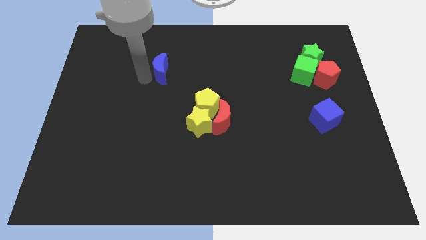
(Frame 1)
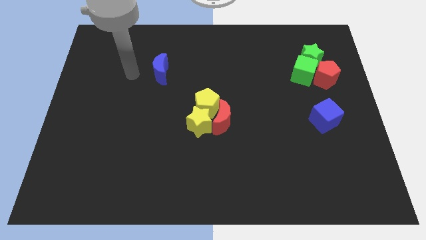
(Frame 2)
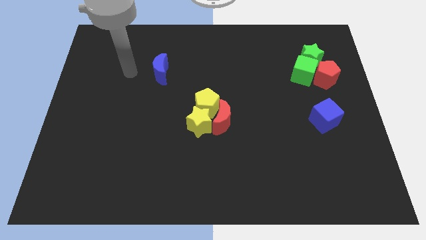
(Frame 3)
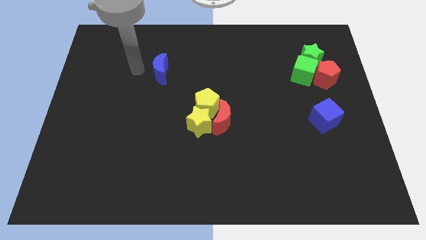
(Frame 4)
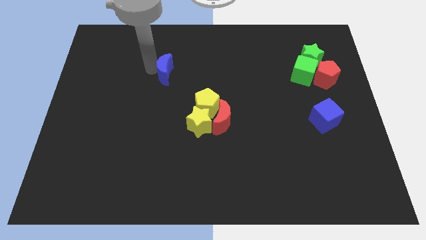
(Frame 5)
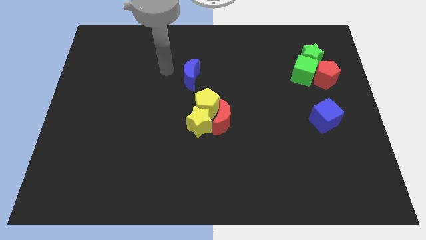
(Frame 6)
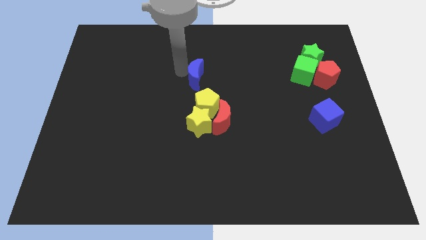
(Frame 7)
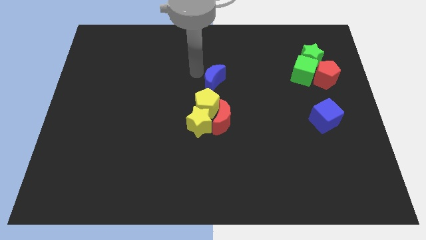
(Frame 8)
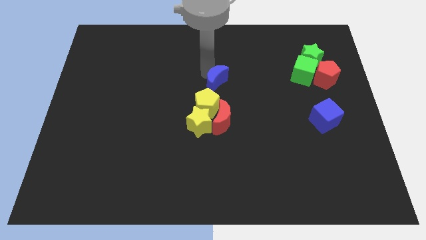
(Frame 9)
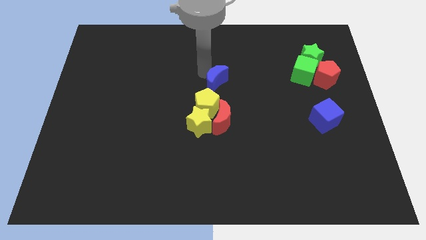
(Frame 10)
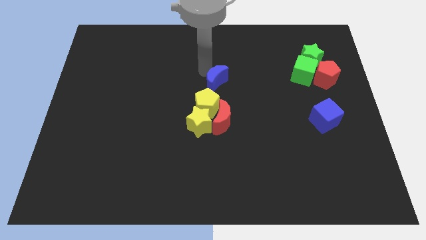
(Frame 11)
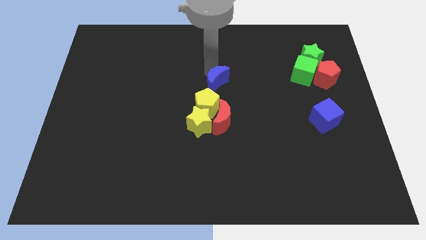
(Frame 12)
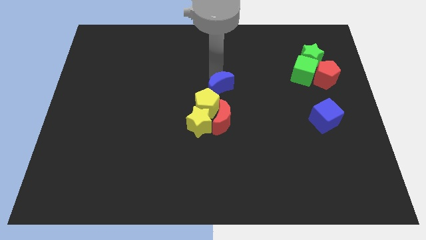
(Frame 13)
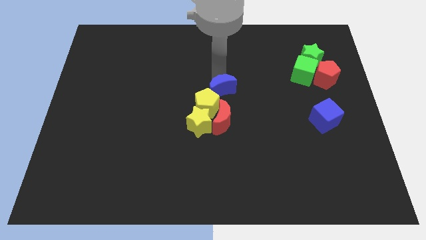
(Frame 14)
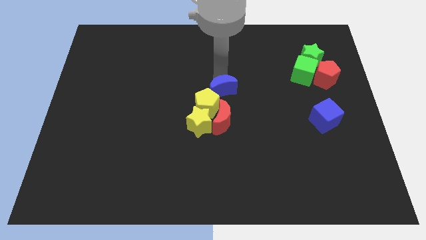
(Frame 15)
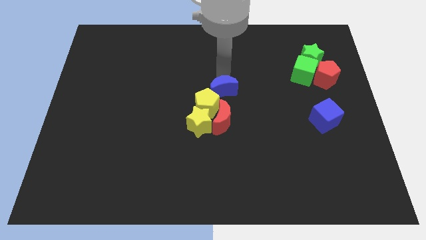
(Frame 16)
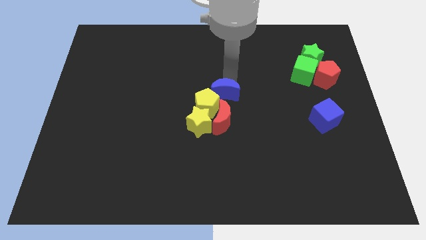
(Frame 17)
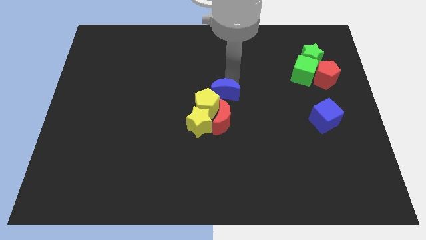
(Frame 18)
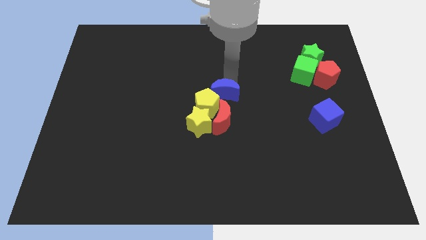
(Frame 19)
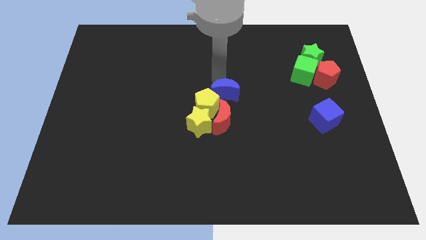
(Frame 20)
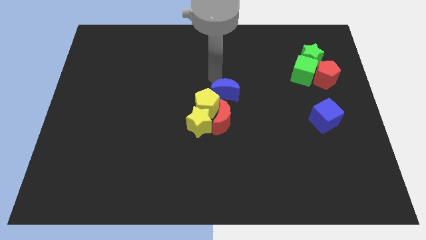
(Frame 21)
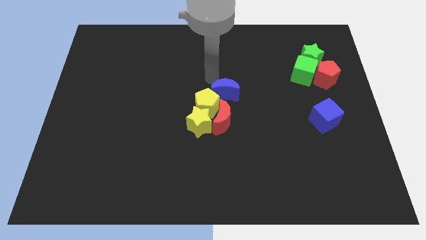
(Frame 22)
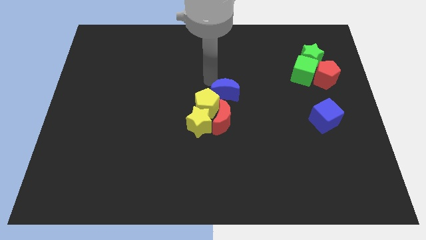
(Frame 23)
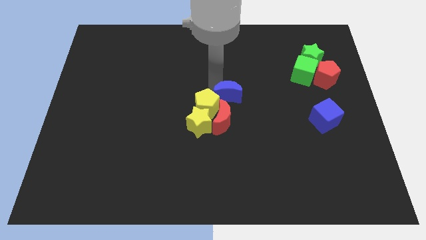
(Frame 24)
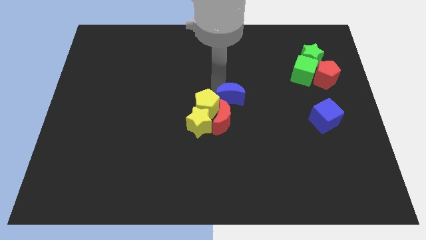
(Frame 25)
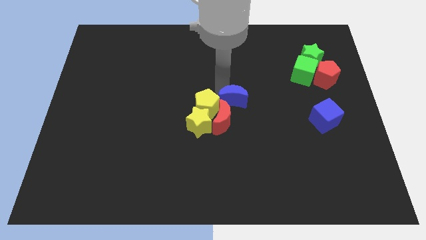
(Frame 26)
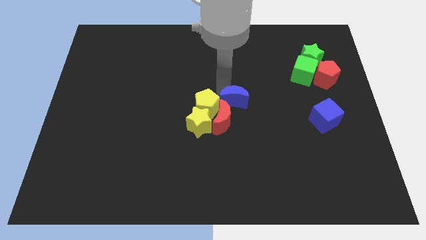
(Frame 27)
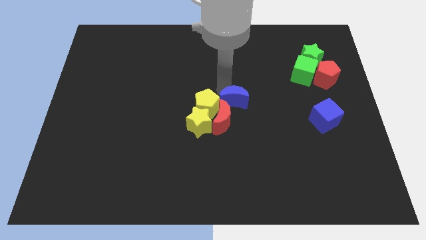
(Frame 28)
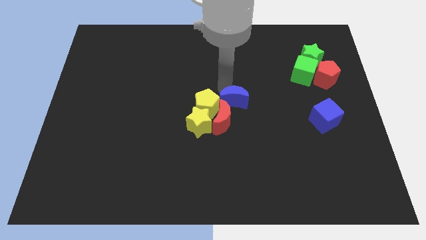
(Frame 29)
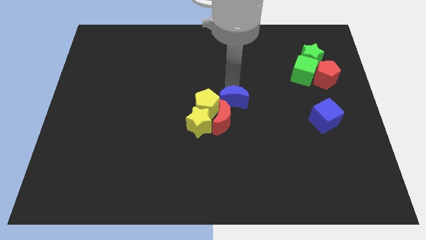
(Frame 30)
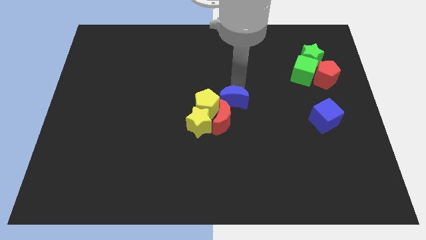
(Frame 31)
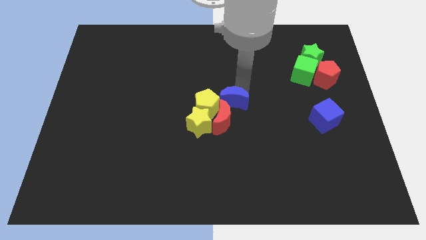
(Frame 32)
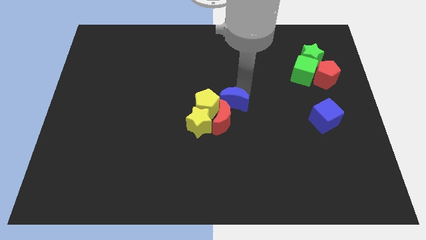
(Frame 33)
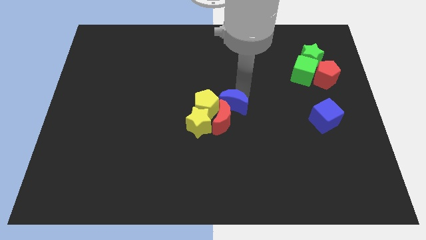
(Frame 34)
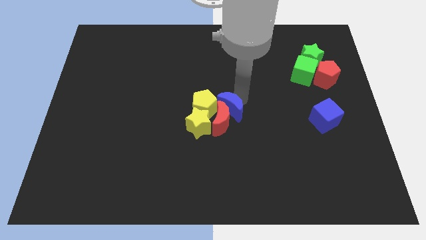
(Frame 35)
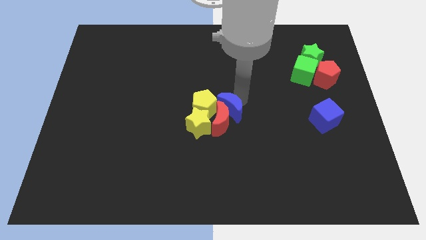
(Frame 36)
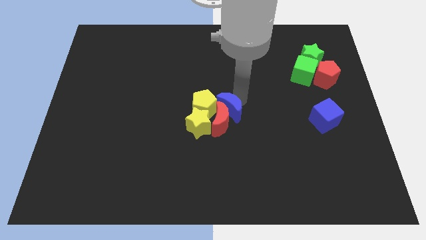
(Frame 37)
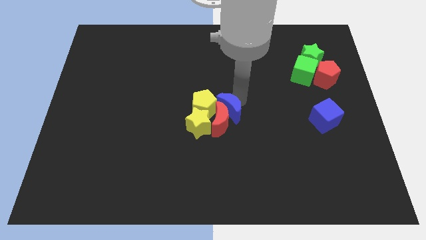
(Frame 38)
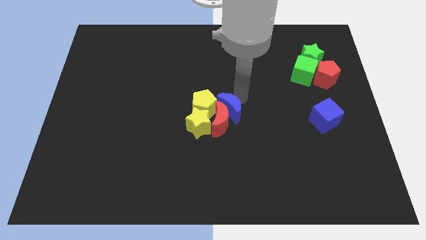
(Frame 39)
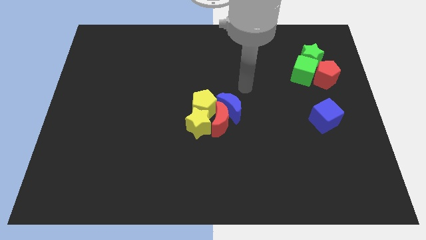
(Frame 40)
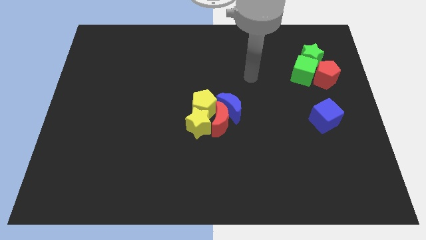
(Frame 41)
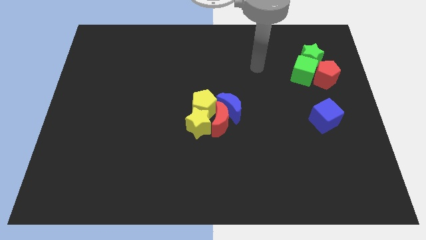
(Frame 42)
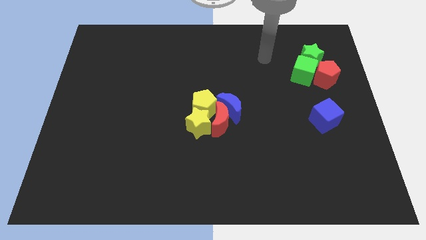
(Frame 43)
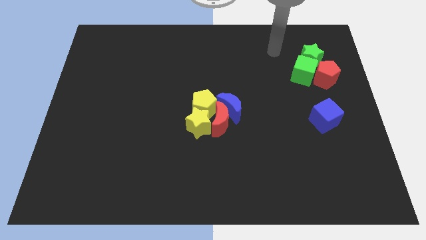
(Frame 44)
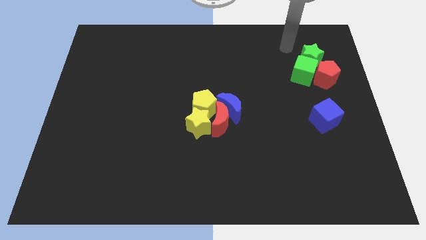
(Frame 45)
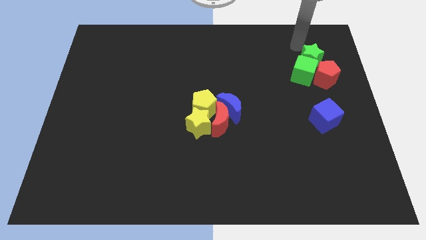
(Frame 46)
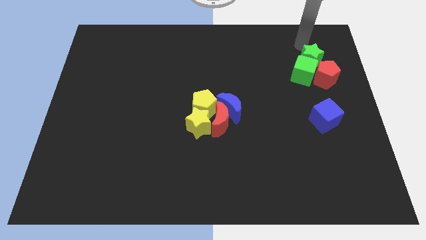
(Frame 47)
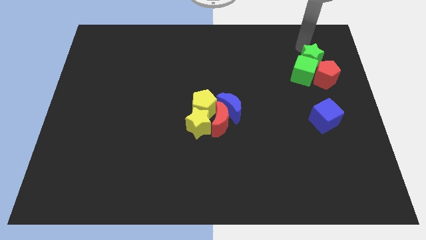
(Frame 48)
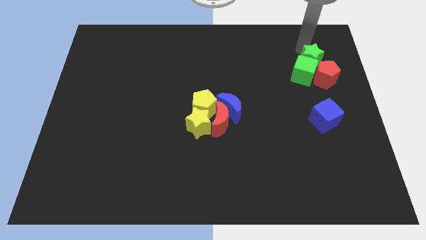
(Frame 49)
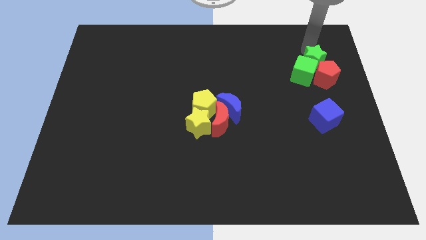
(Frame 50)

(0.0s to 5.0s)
push the blue crescent into the the red crescent at the center of the board

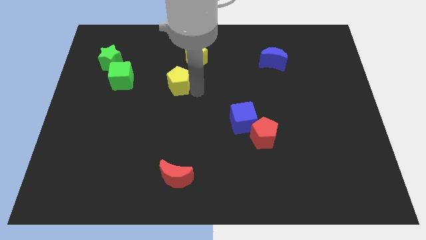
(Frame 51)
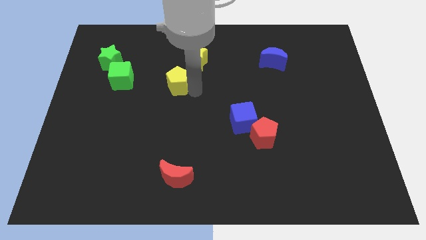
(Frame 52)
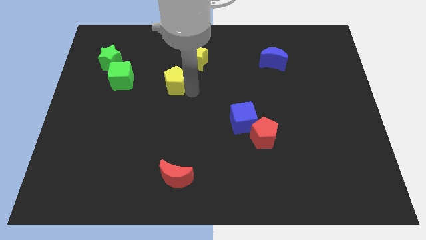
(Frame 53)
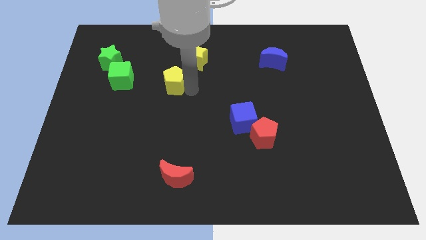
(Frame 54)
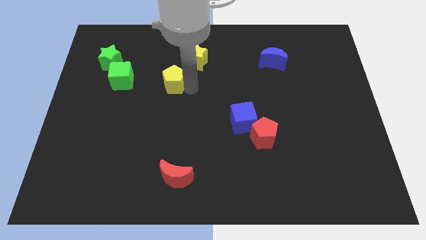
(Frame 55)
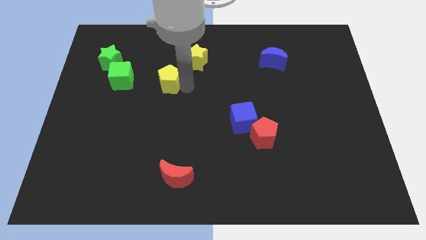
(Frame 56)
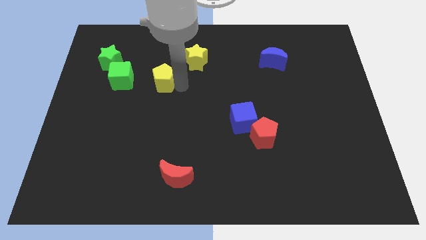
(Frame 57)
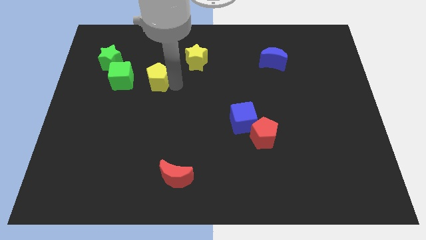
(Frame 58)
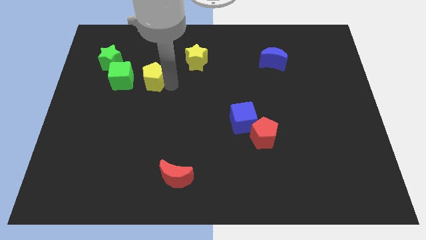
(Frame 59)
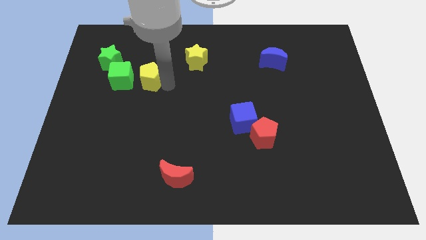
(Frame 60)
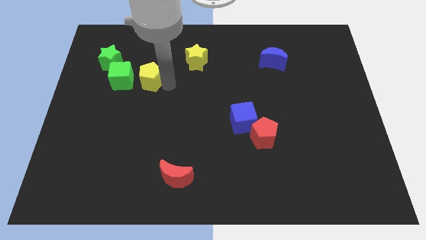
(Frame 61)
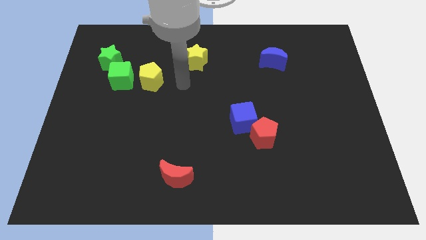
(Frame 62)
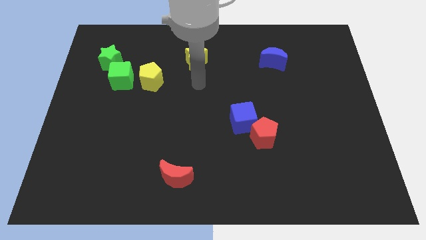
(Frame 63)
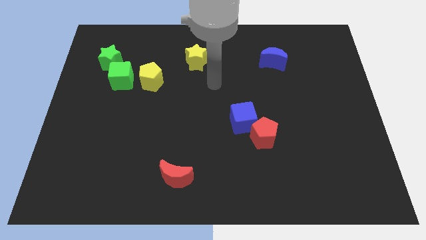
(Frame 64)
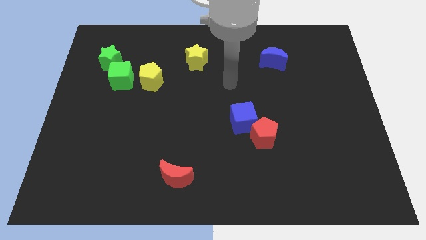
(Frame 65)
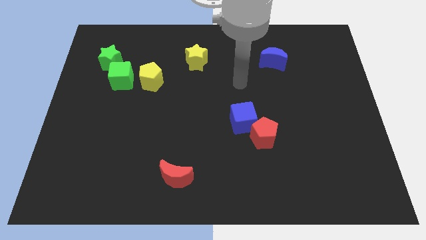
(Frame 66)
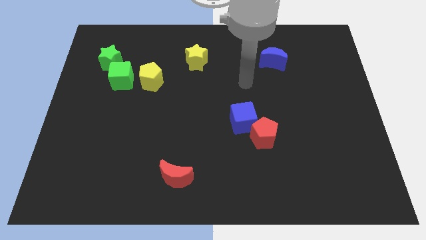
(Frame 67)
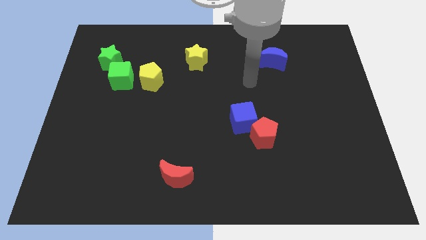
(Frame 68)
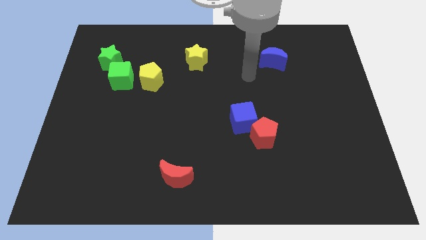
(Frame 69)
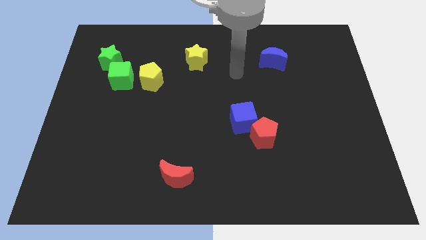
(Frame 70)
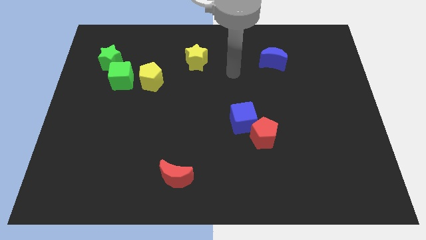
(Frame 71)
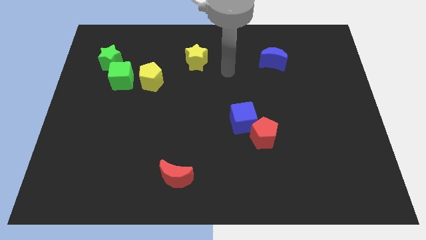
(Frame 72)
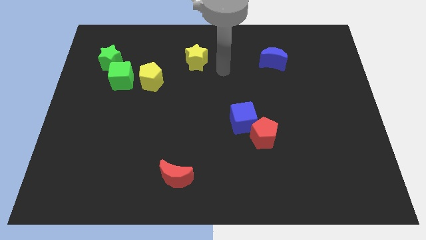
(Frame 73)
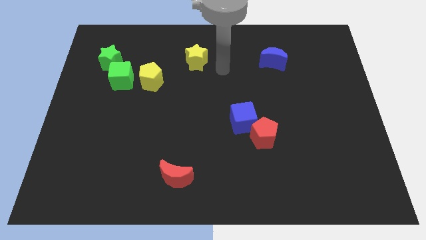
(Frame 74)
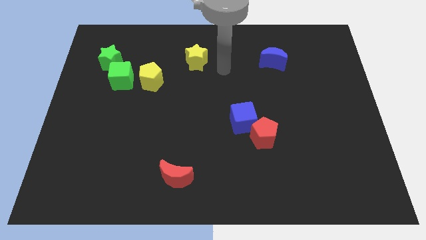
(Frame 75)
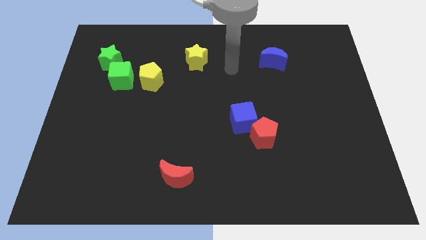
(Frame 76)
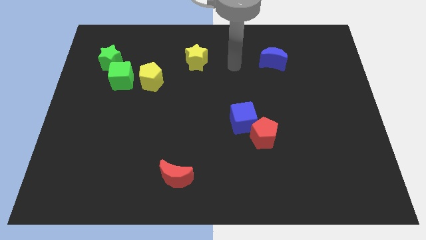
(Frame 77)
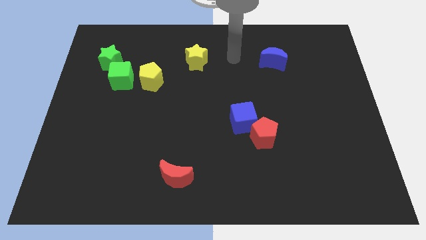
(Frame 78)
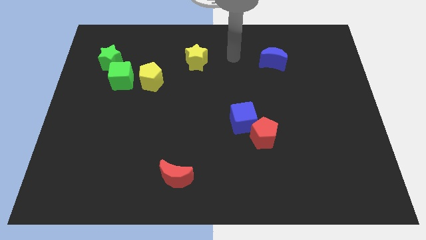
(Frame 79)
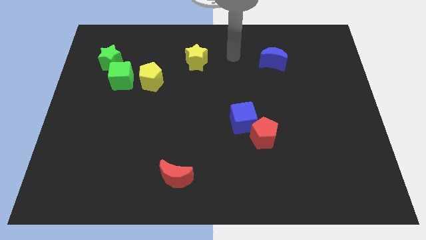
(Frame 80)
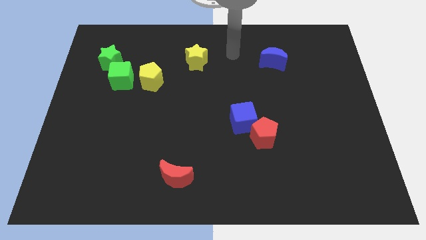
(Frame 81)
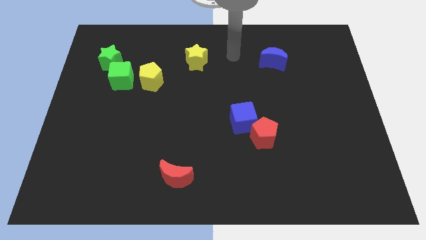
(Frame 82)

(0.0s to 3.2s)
place yellow pentagon to the right of green cube

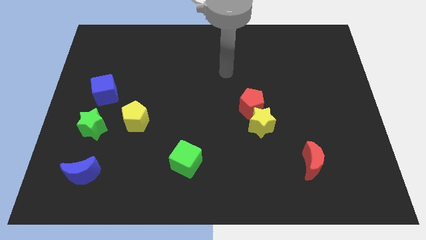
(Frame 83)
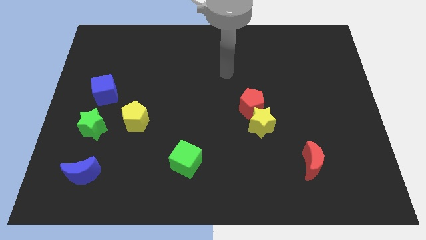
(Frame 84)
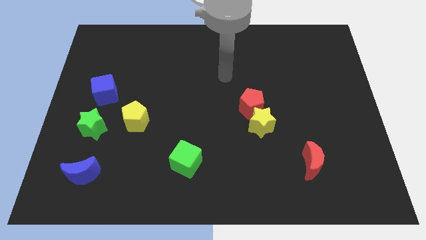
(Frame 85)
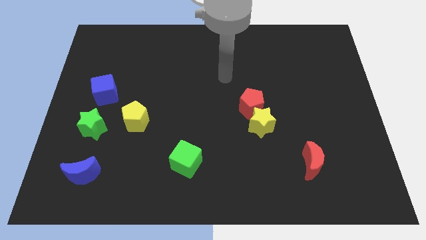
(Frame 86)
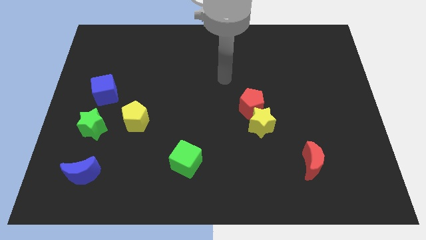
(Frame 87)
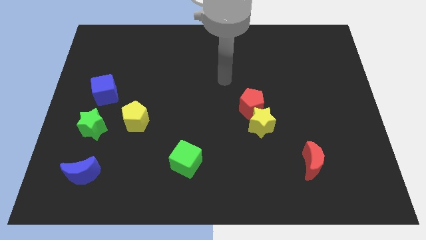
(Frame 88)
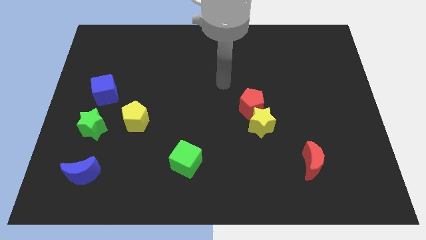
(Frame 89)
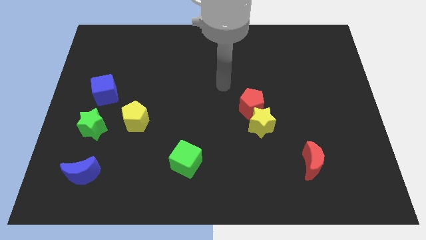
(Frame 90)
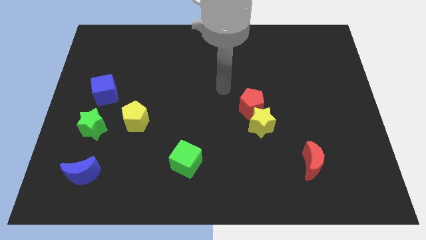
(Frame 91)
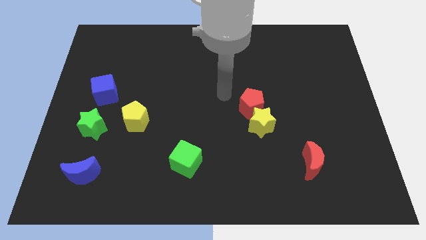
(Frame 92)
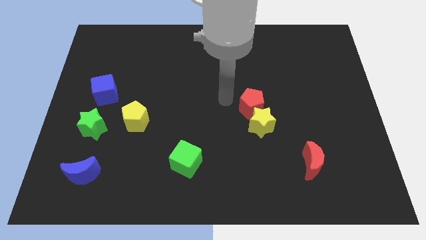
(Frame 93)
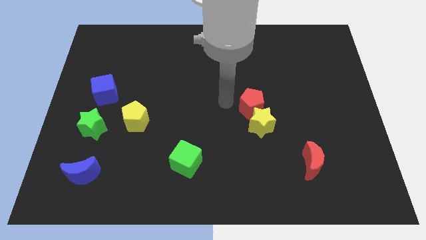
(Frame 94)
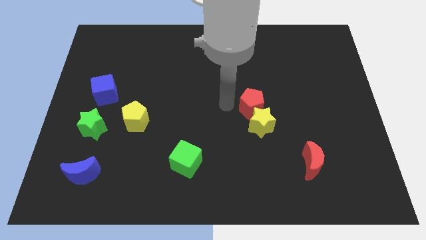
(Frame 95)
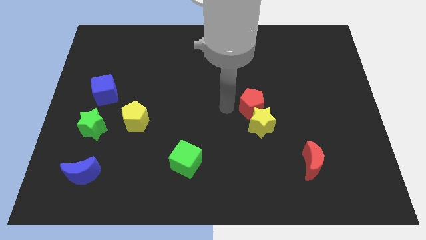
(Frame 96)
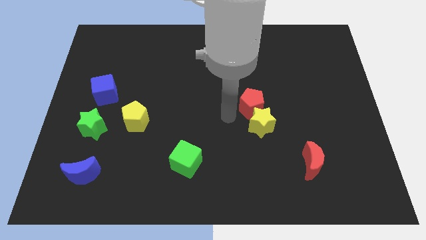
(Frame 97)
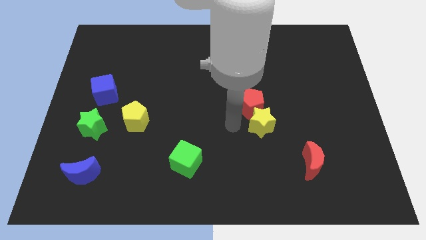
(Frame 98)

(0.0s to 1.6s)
move the arm close to the red pentagon
